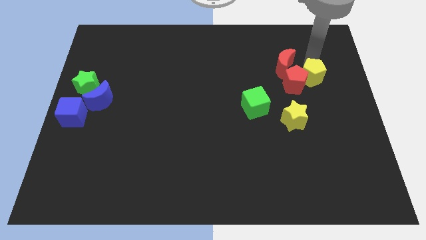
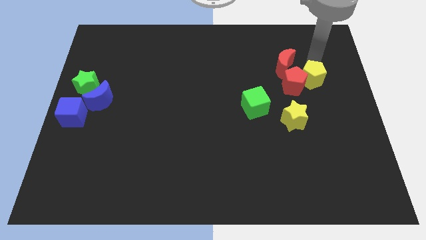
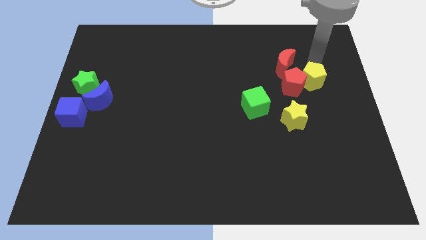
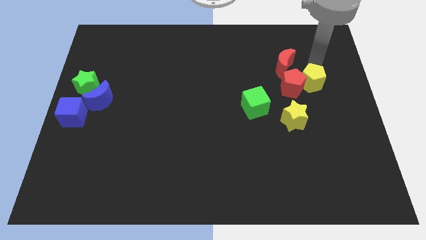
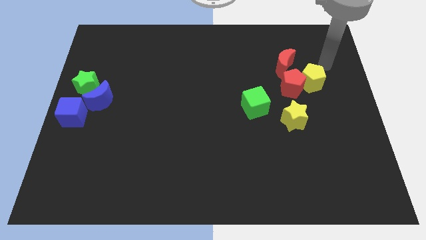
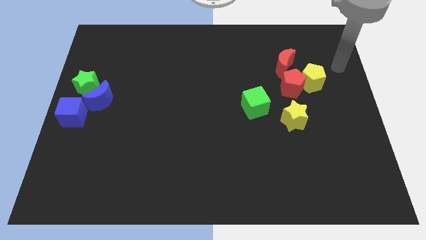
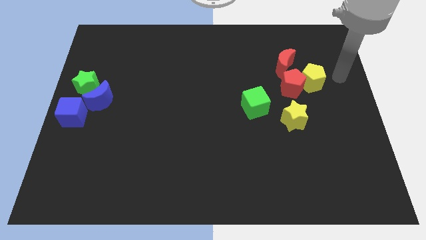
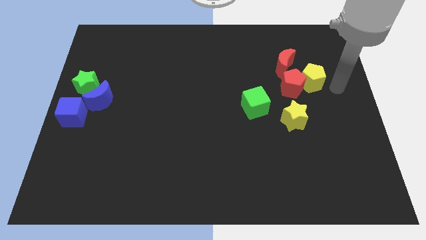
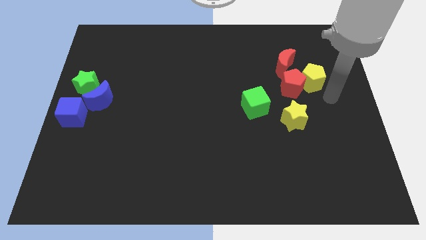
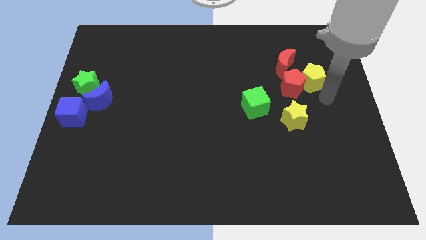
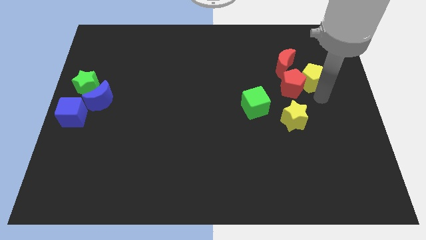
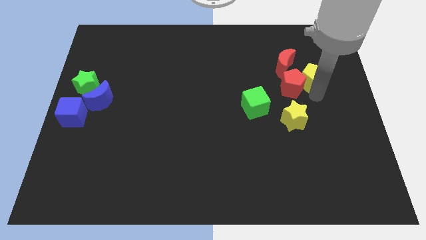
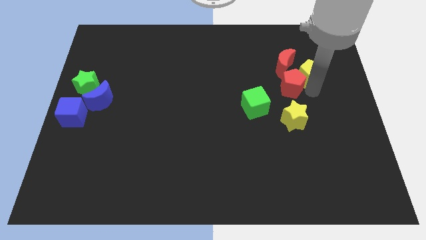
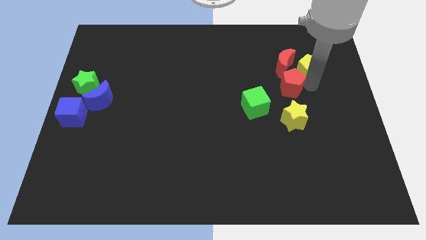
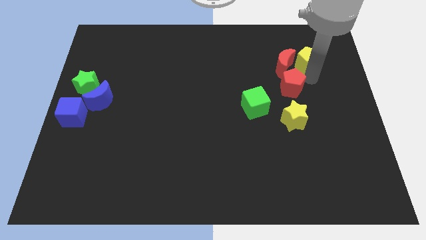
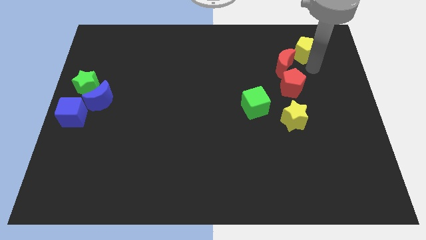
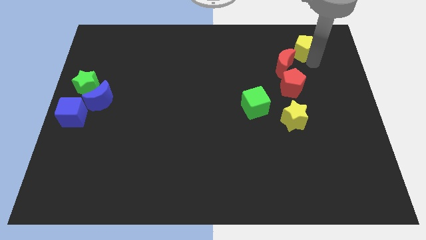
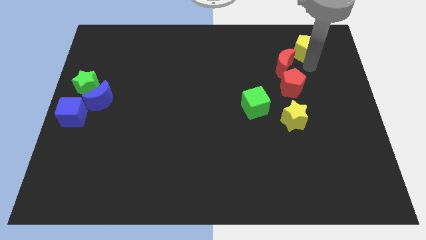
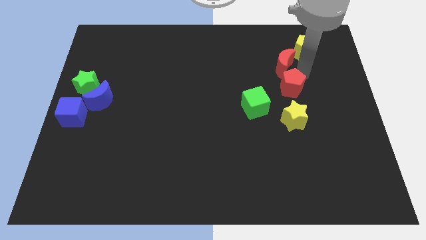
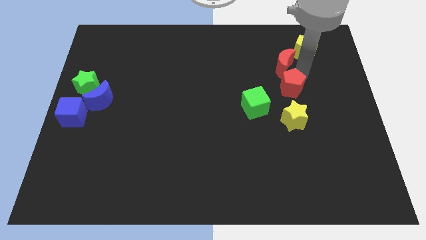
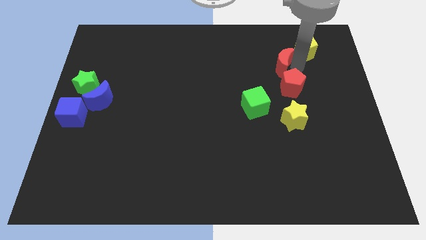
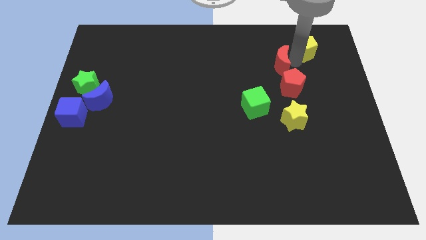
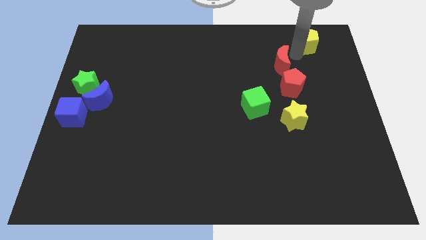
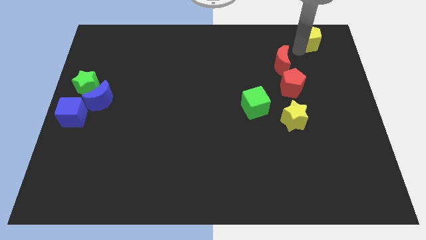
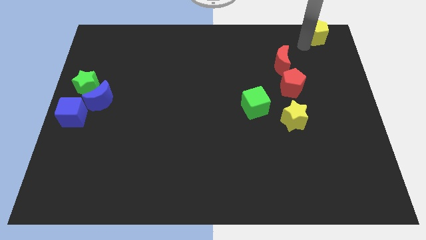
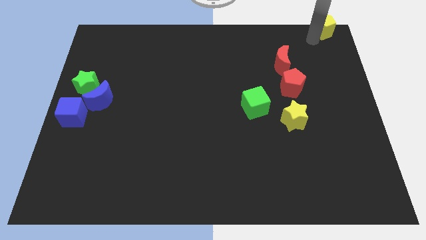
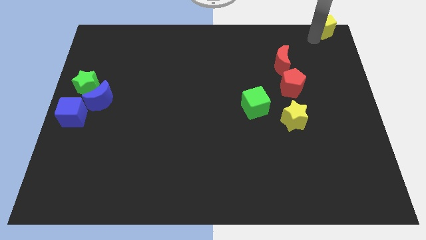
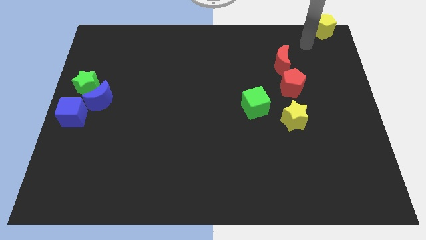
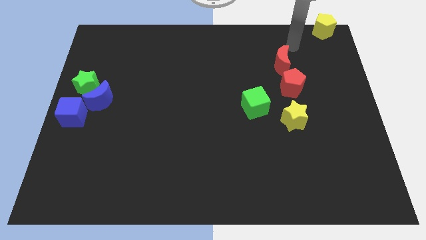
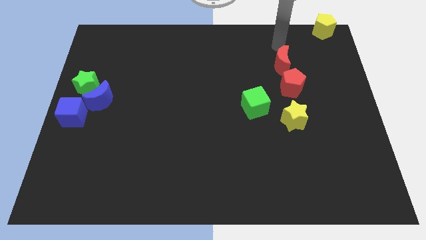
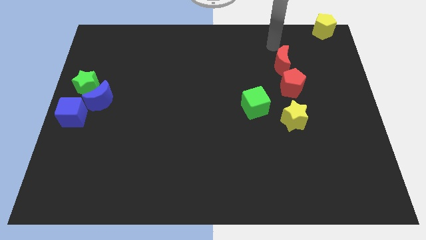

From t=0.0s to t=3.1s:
push the yellow pentagon to the top right corner of the board

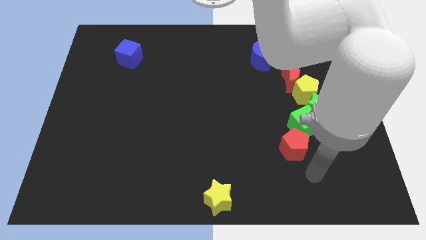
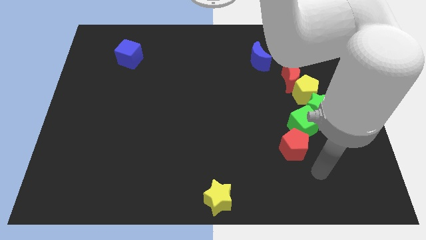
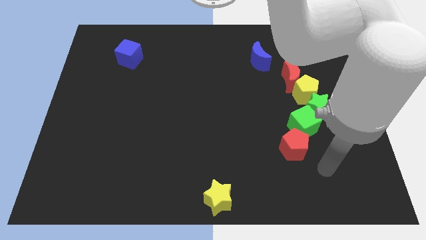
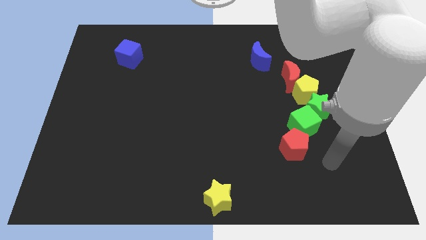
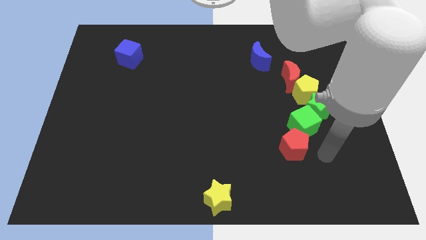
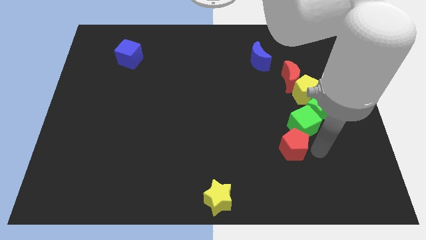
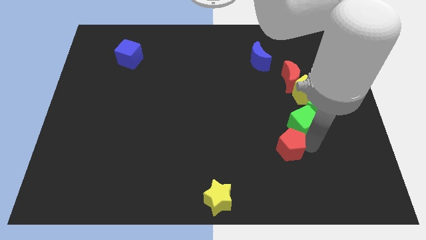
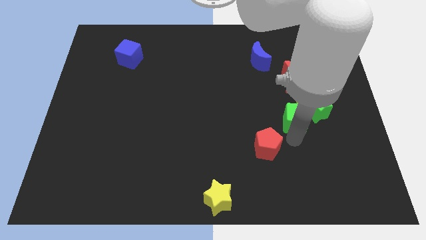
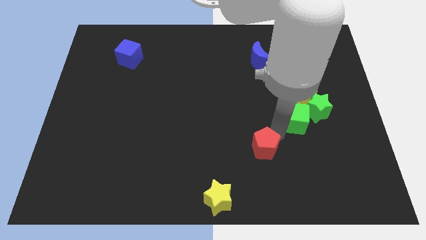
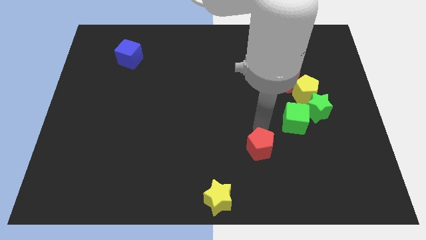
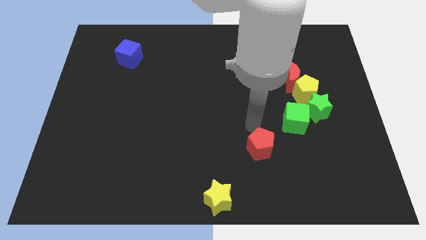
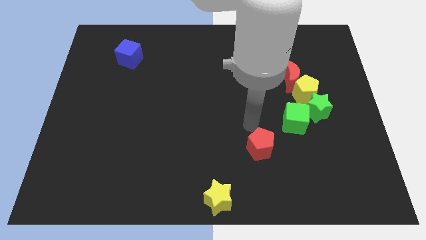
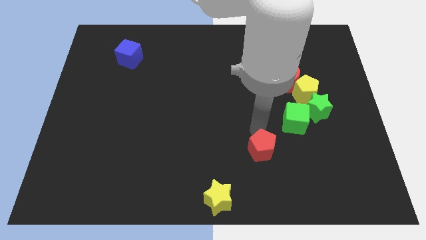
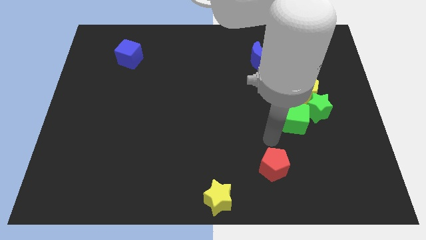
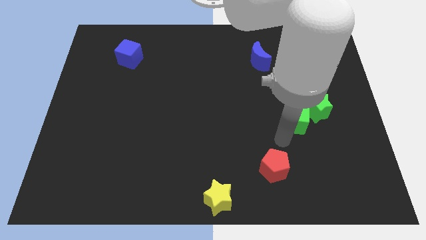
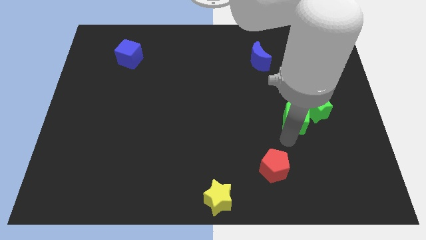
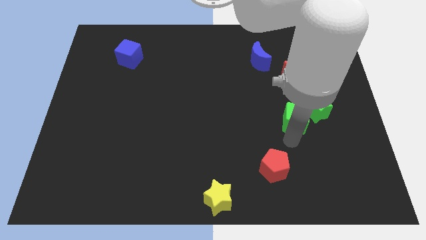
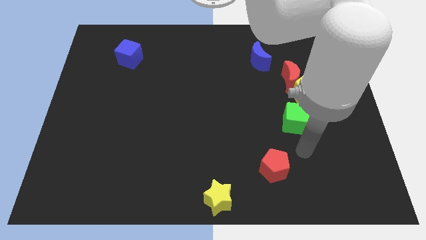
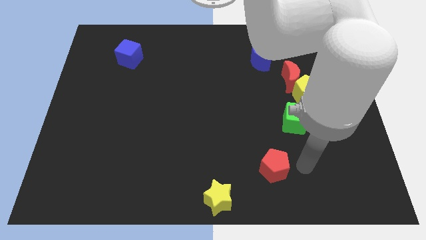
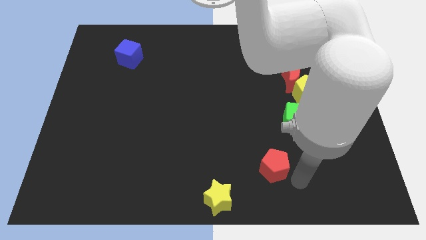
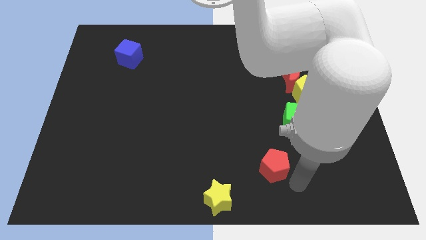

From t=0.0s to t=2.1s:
push the red pentagon slightly towards the bottom side

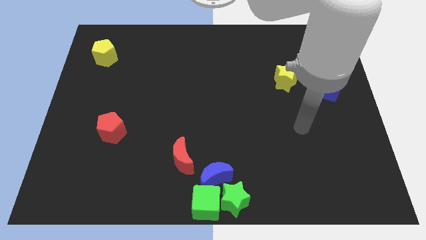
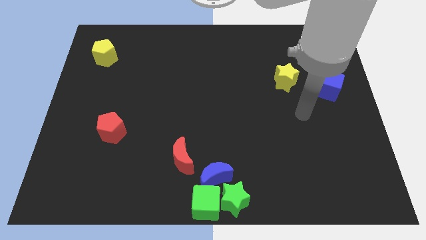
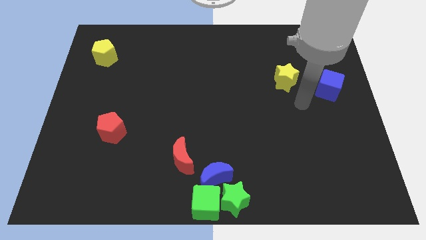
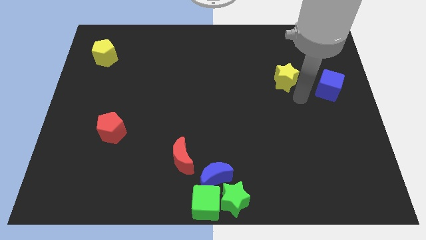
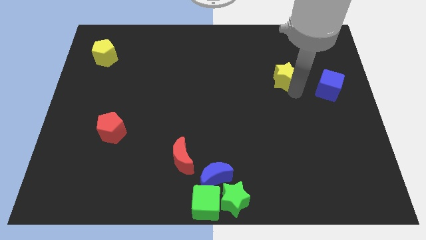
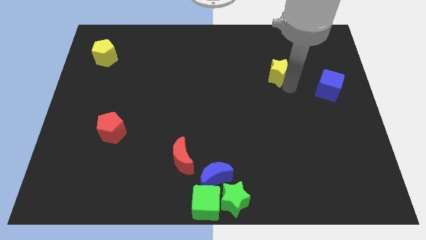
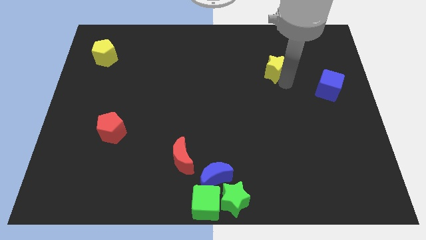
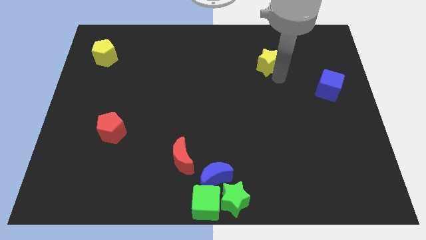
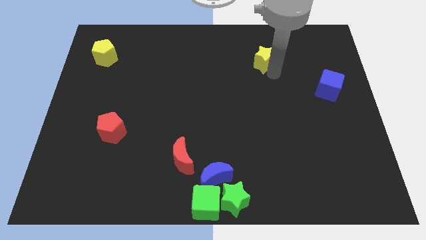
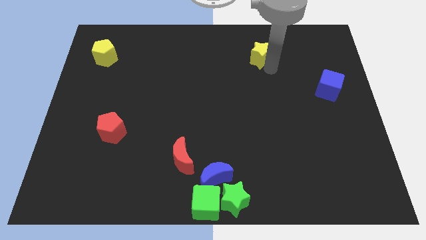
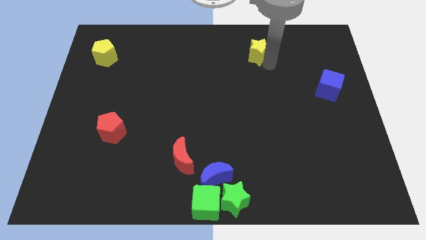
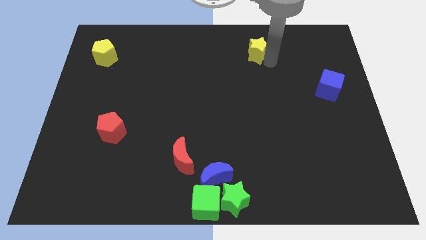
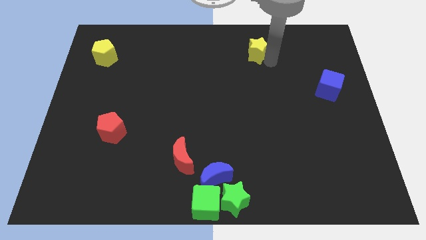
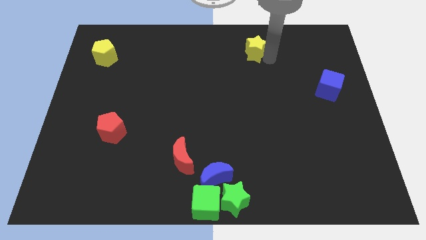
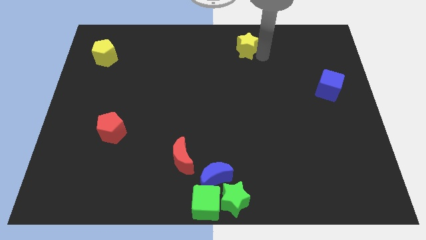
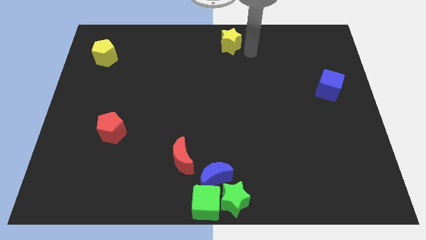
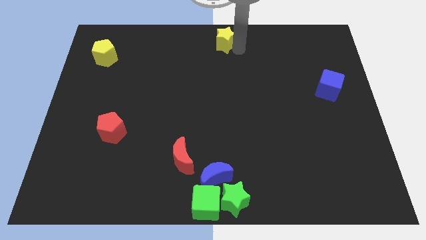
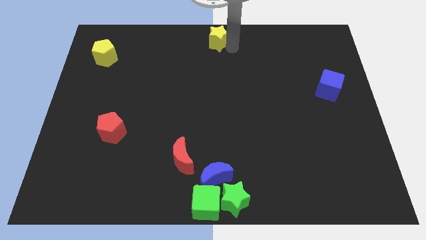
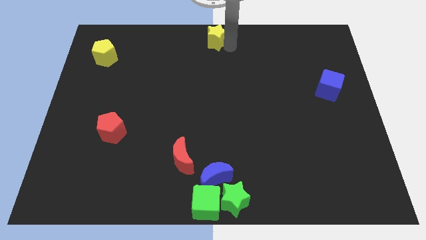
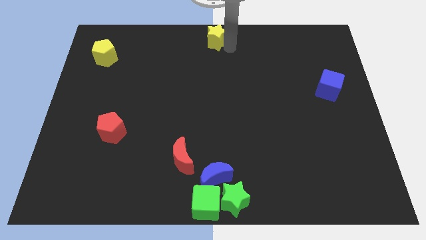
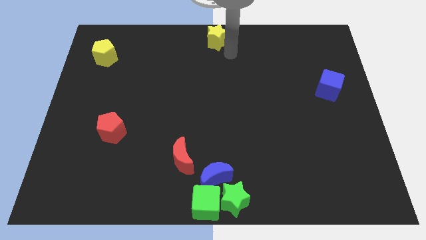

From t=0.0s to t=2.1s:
move yellow star to the top center

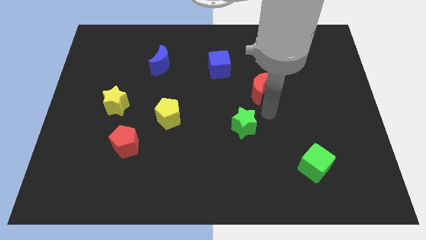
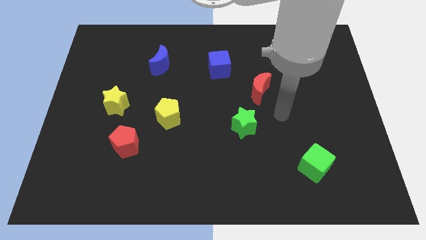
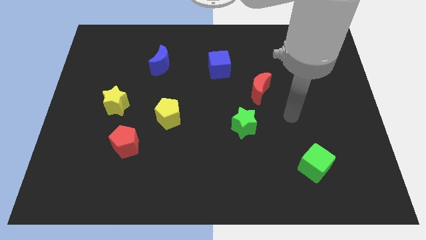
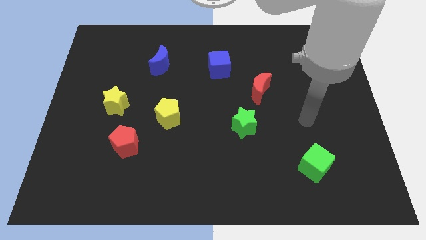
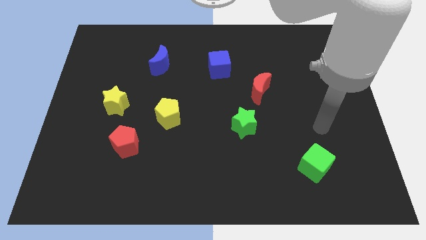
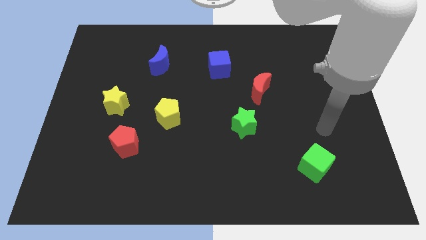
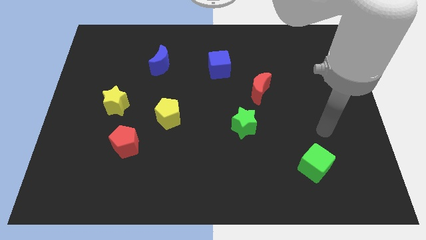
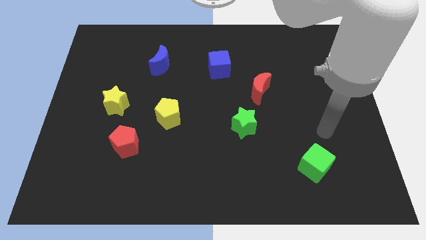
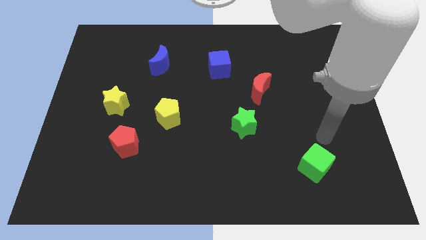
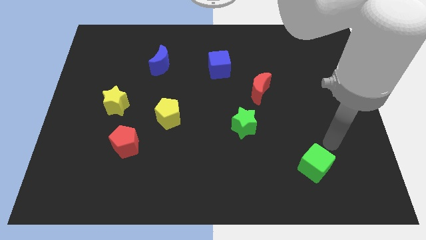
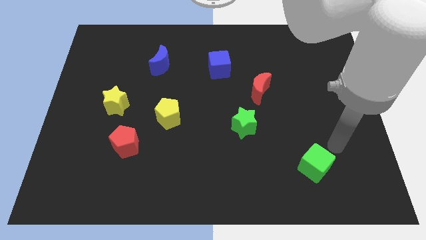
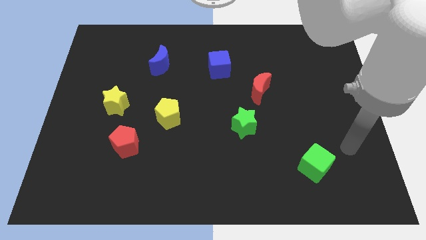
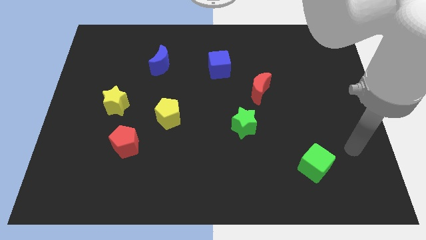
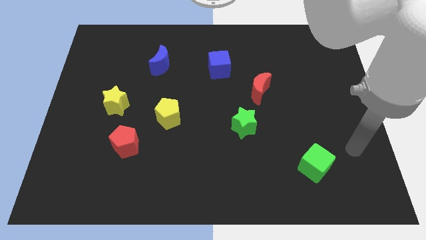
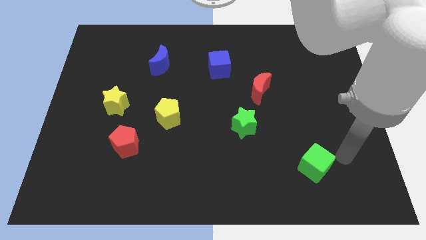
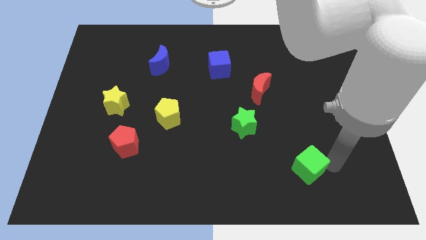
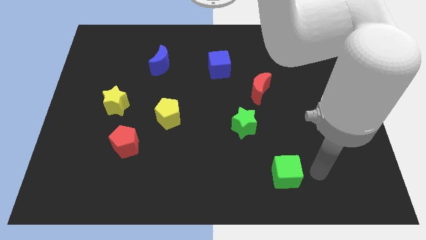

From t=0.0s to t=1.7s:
point your arm to the right of the green cube
